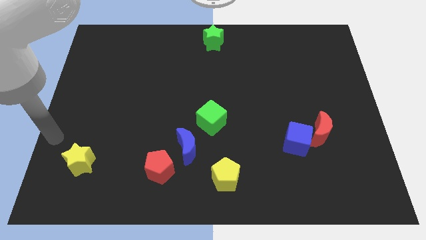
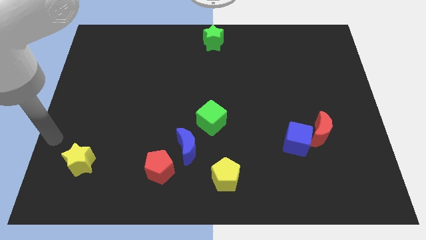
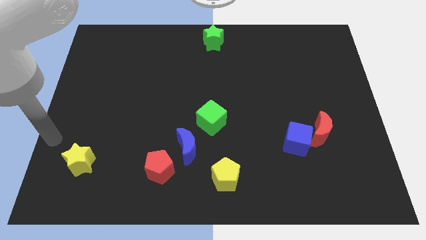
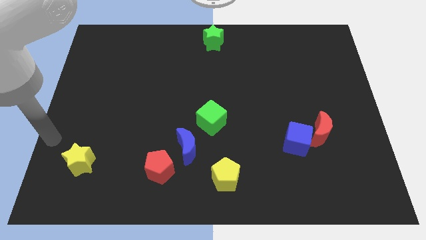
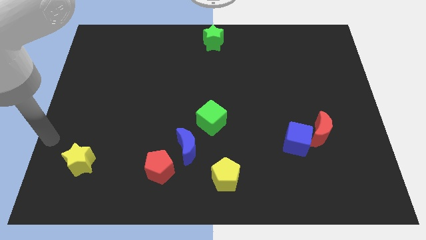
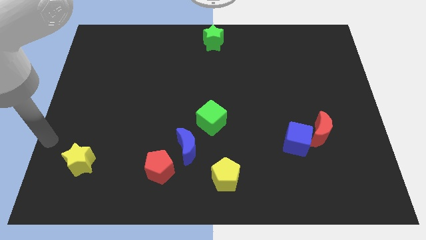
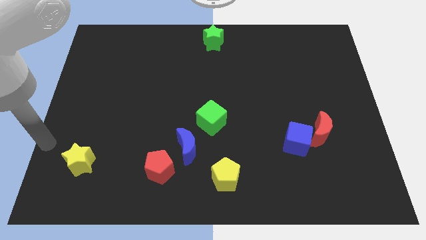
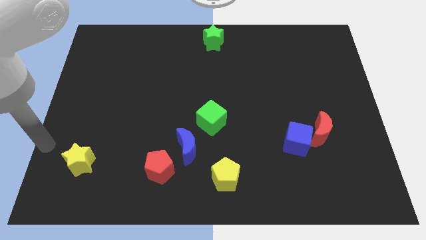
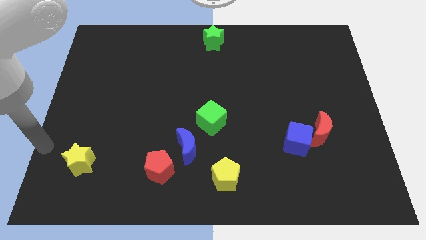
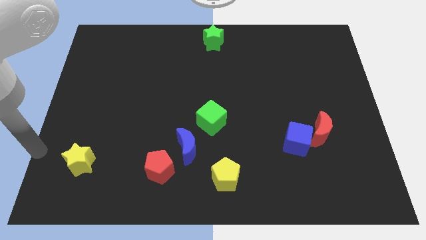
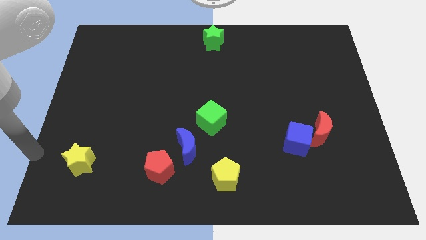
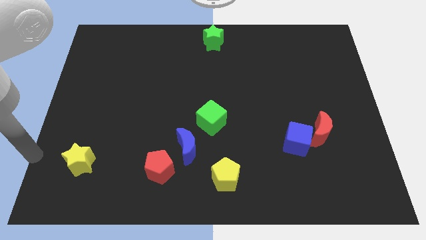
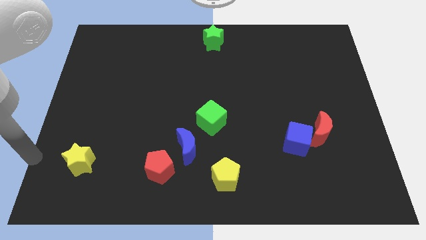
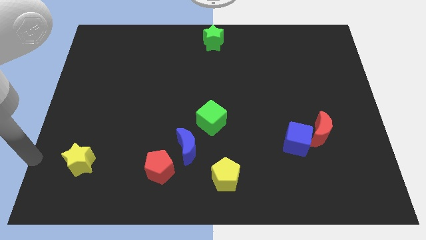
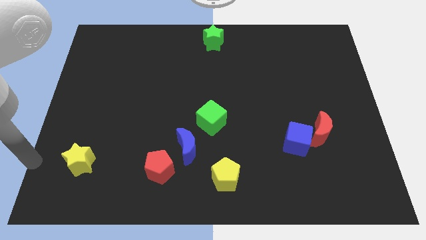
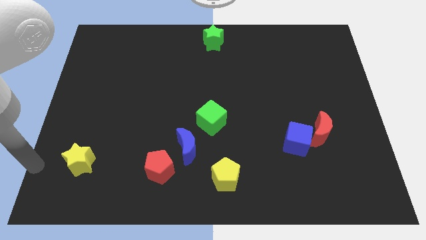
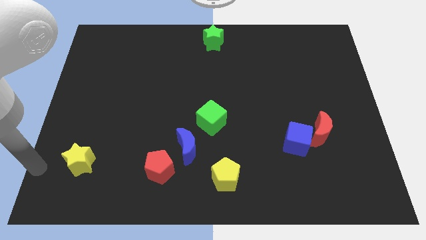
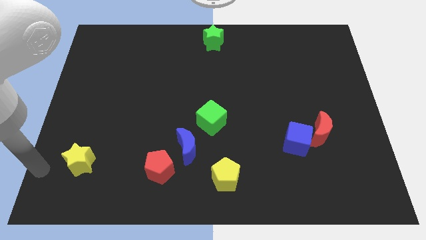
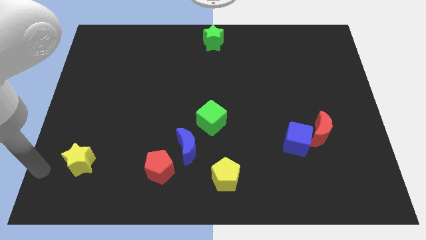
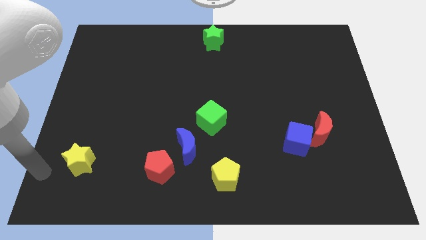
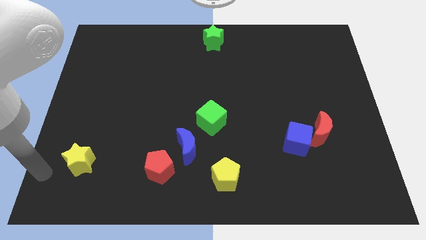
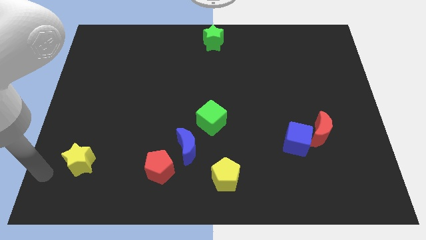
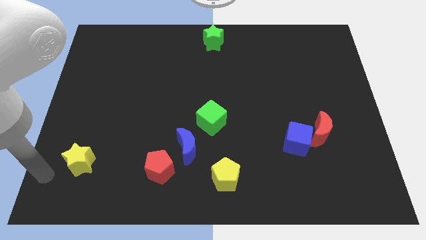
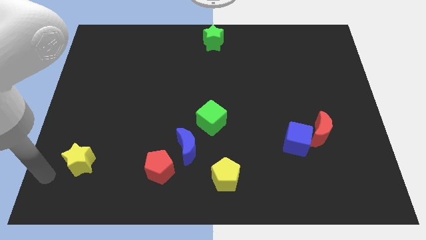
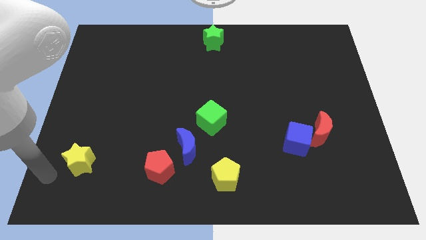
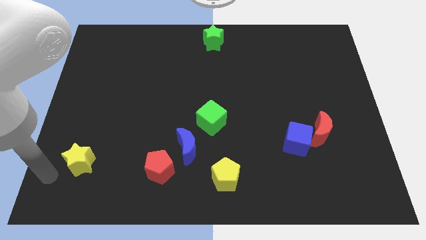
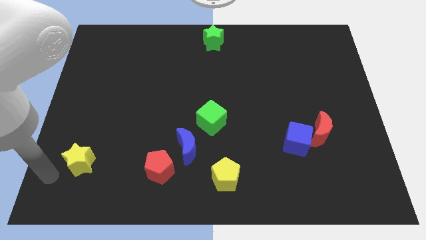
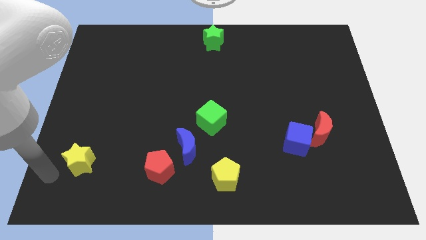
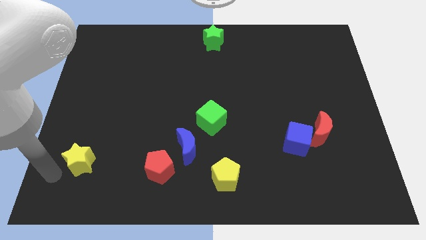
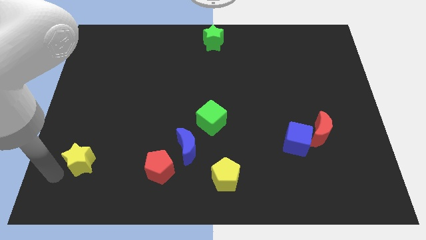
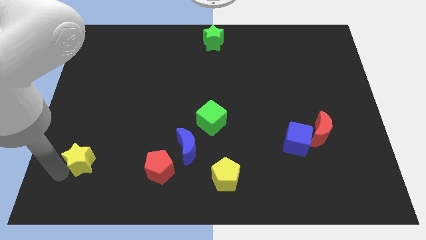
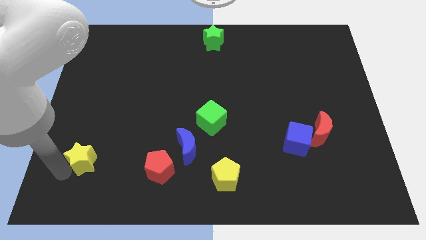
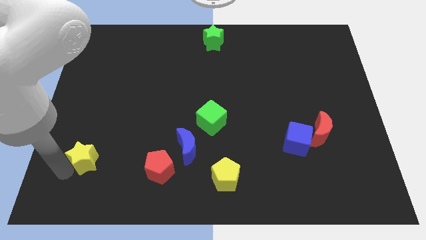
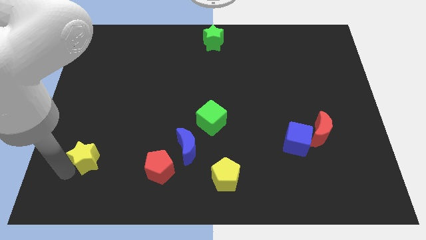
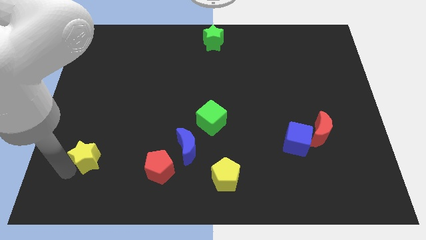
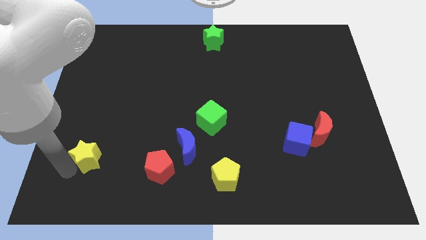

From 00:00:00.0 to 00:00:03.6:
drag the yellow star slightly to the right

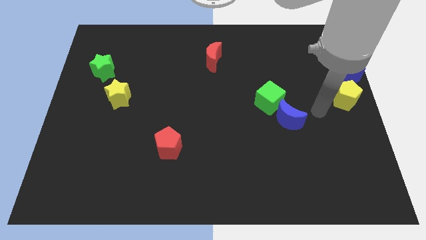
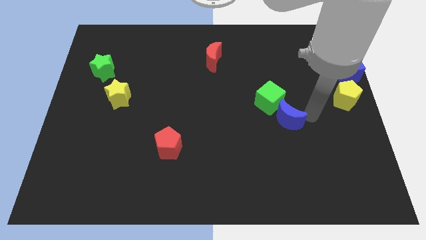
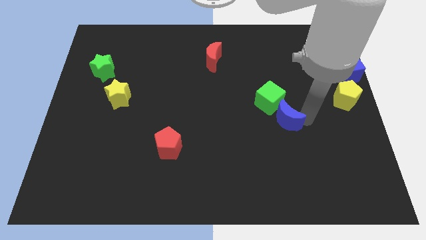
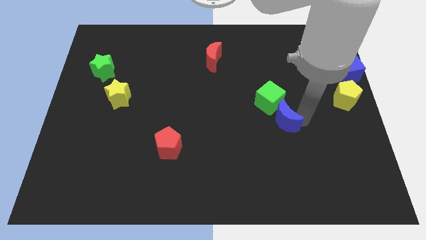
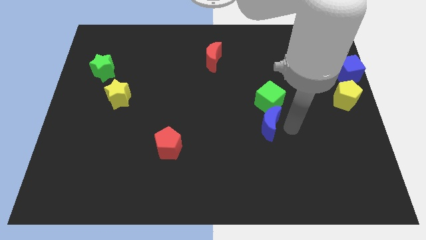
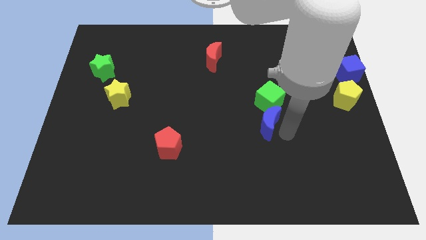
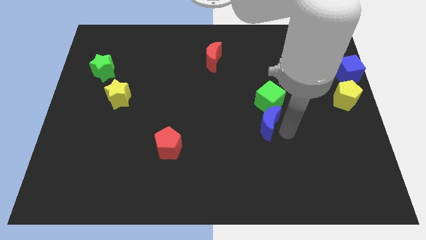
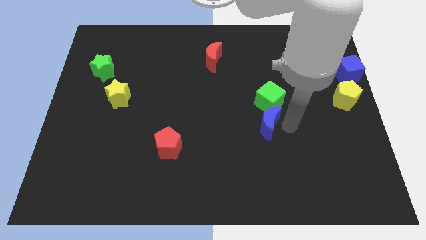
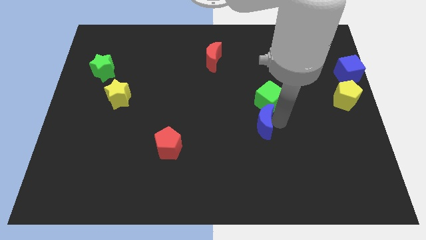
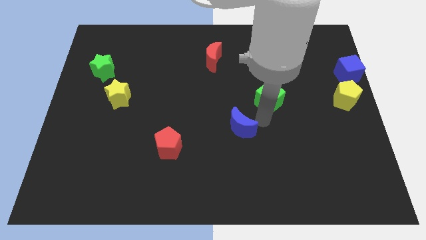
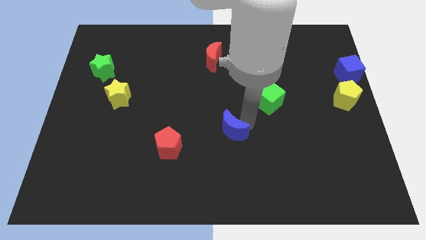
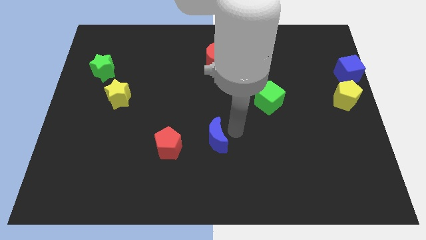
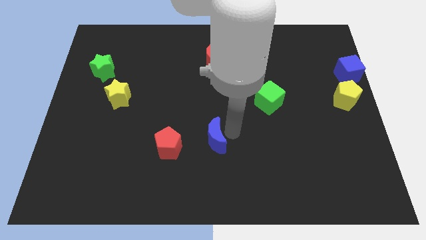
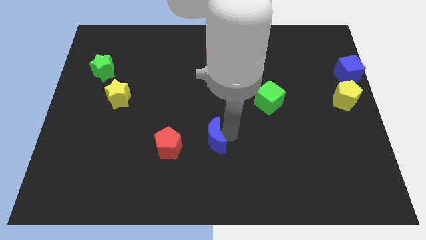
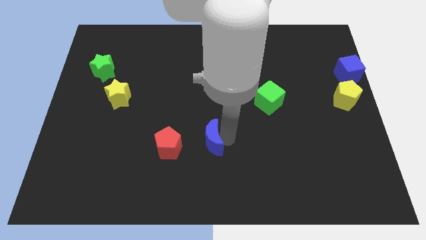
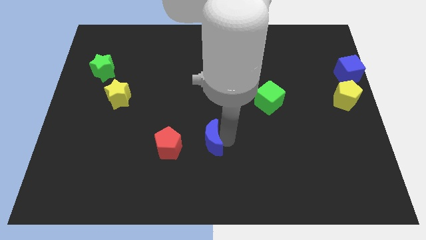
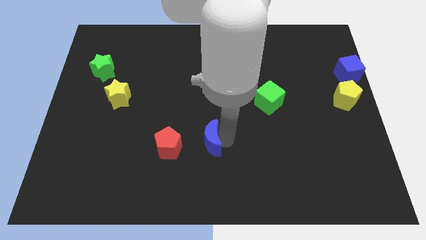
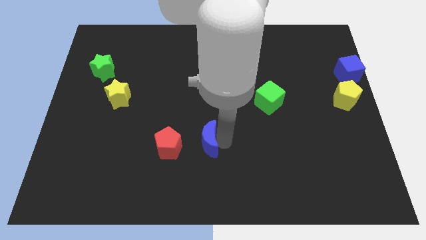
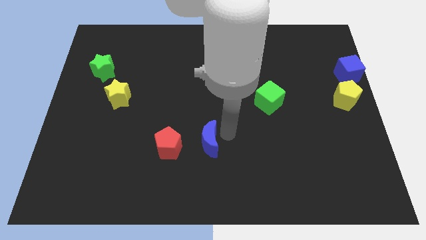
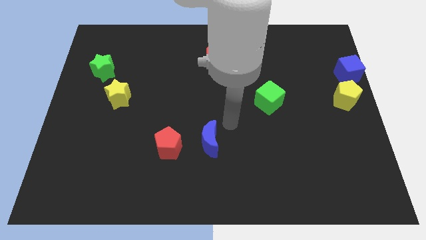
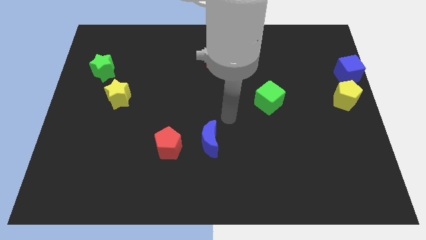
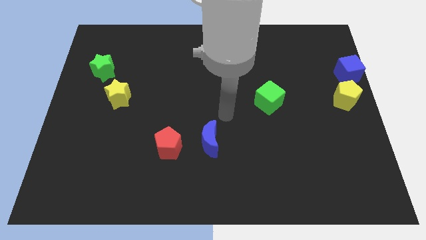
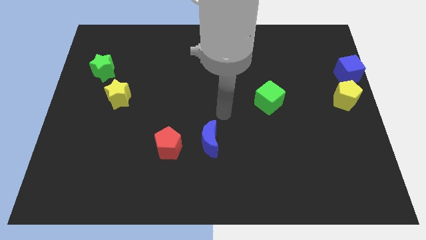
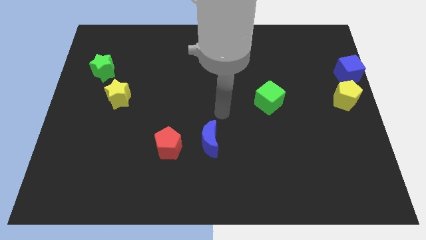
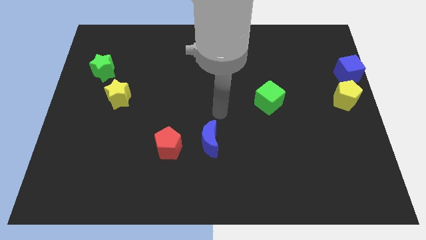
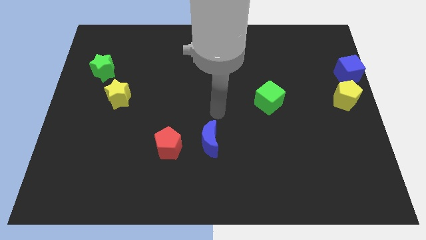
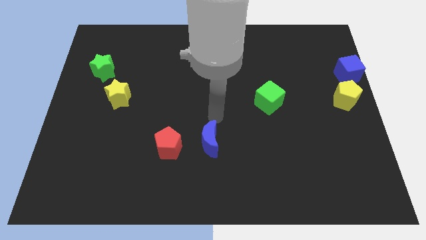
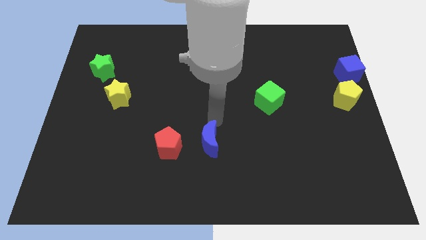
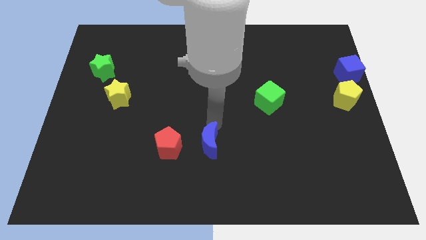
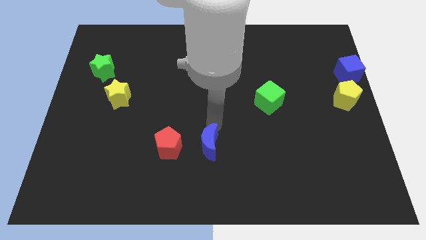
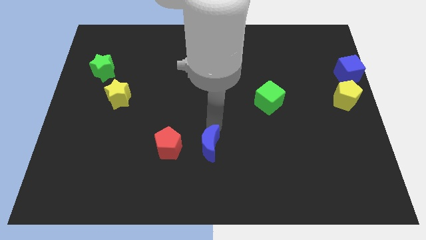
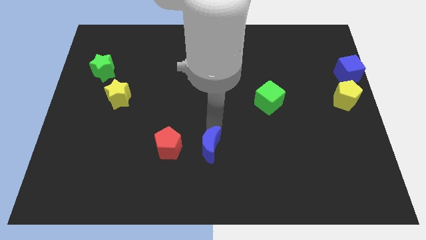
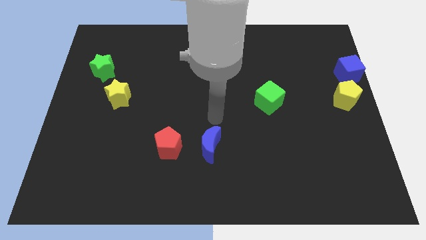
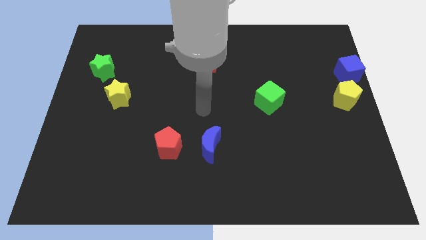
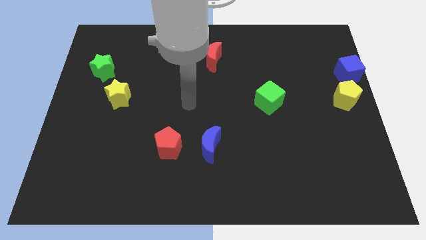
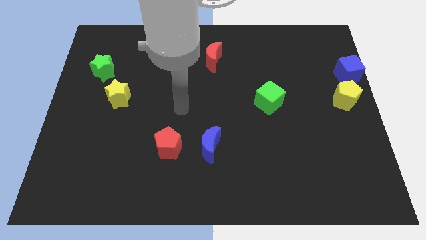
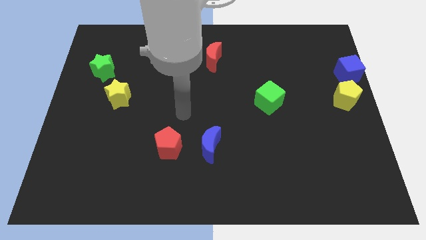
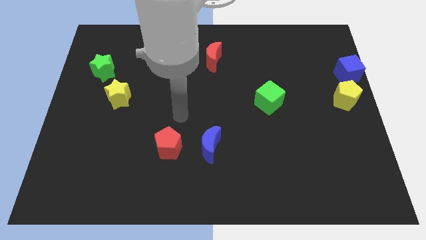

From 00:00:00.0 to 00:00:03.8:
move the blue crescent to the right of the red pentagon

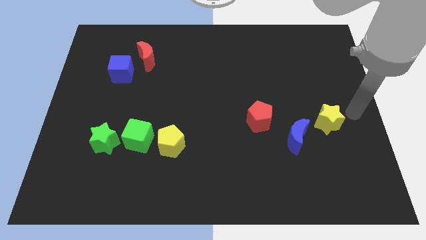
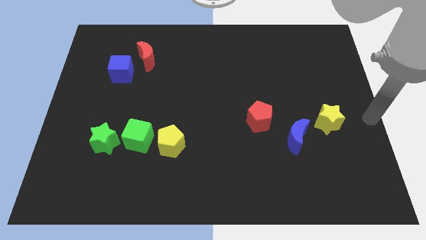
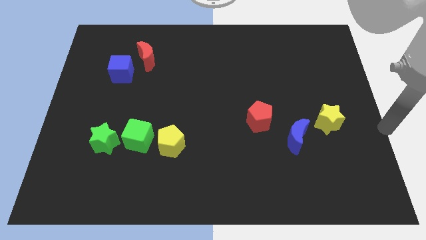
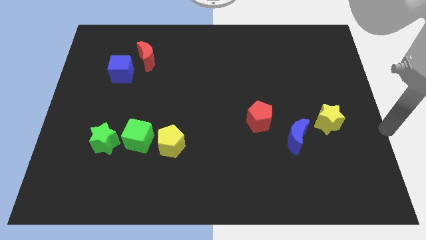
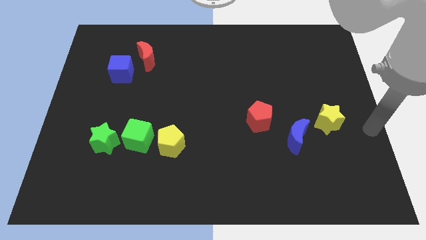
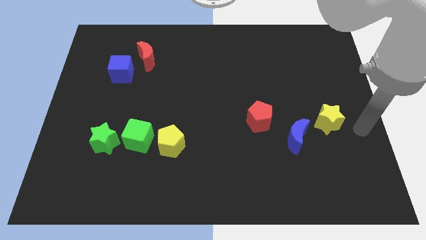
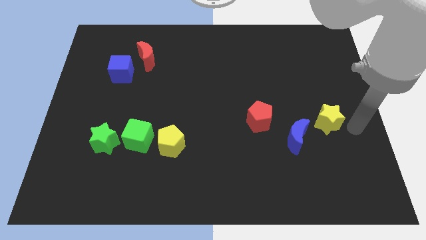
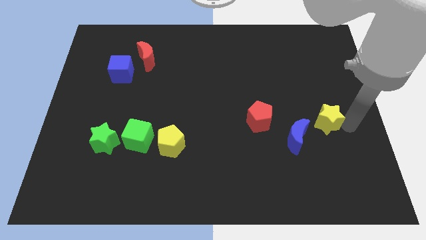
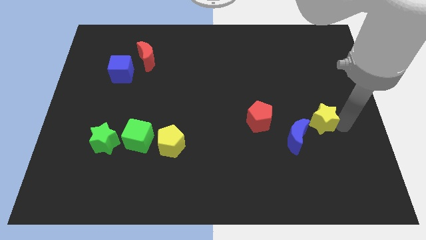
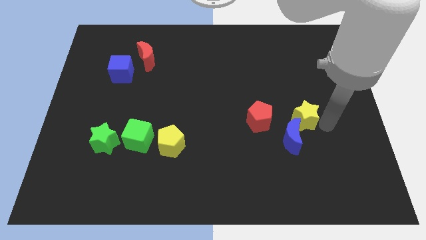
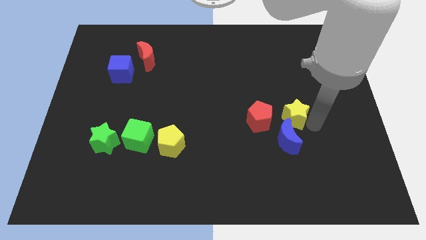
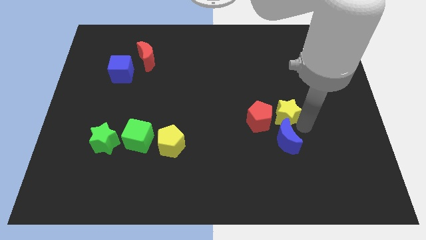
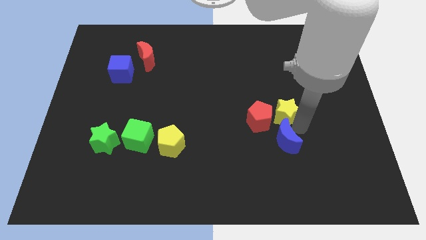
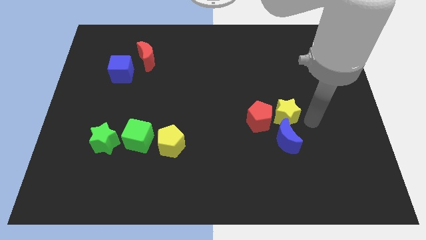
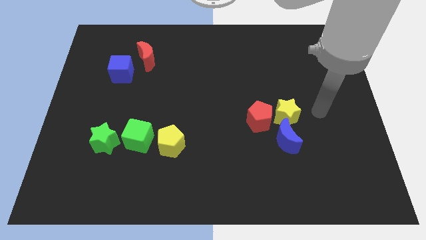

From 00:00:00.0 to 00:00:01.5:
move the yellow star to the top side of the blue crescent

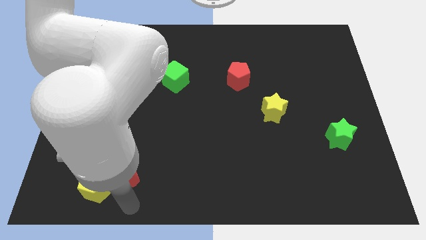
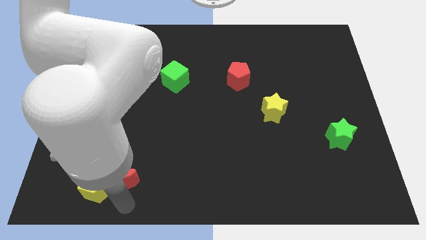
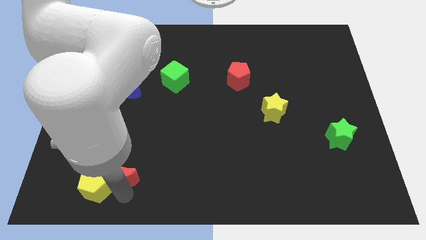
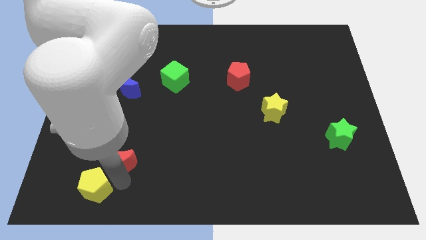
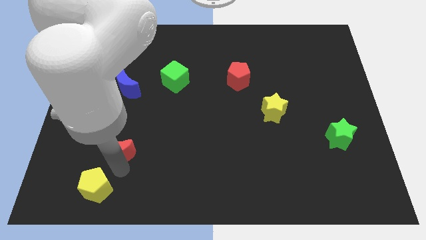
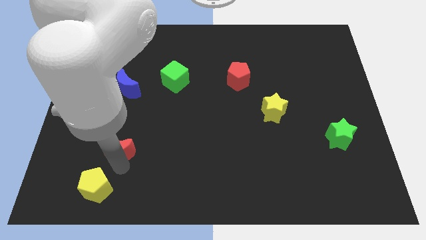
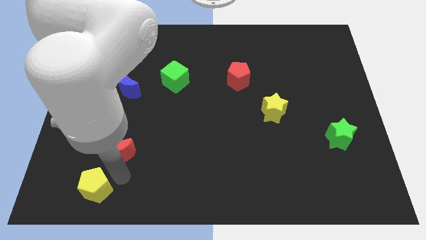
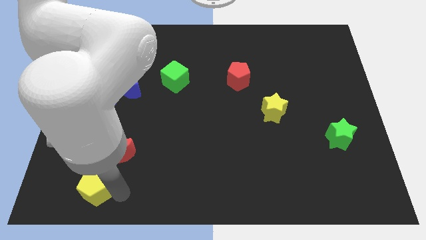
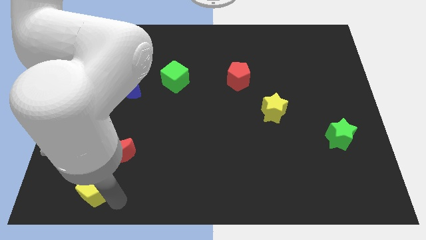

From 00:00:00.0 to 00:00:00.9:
push red crescent slightly towards top
